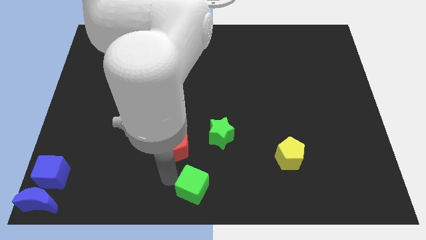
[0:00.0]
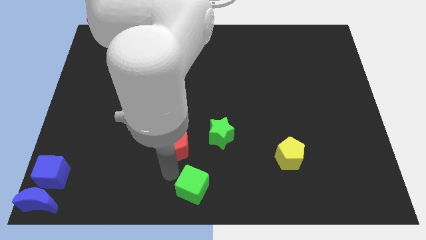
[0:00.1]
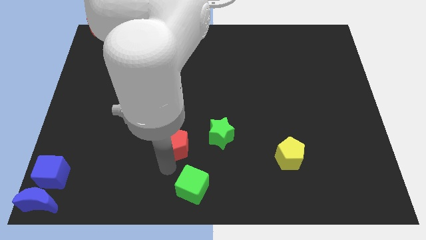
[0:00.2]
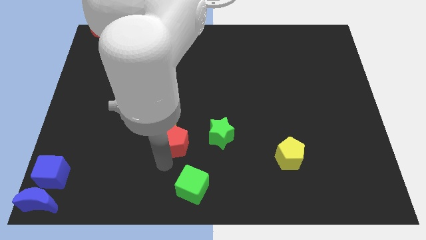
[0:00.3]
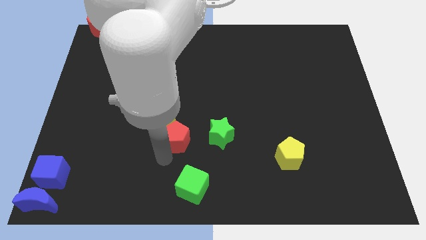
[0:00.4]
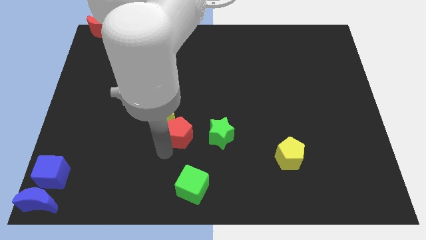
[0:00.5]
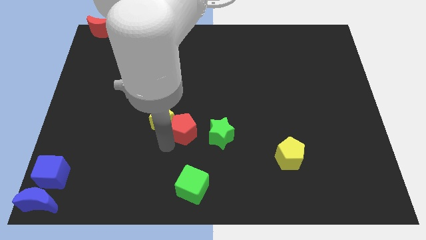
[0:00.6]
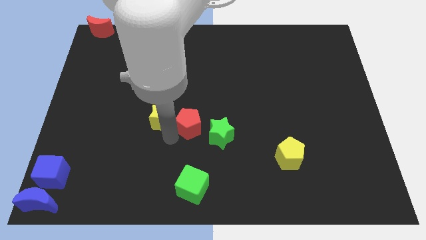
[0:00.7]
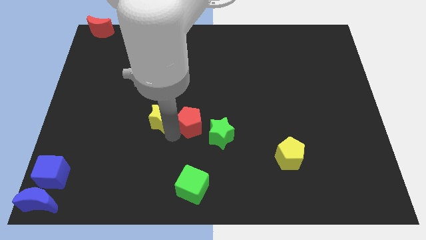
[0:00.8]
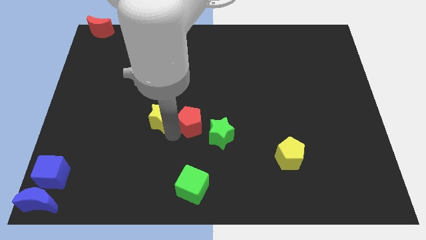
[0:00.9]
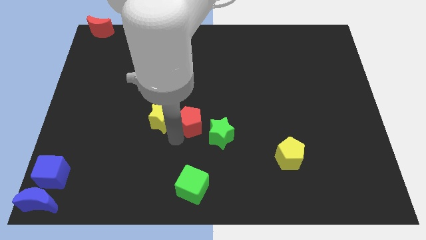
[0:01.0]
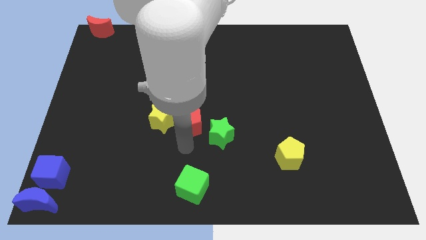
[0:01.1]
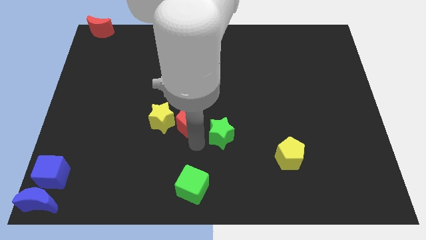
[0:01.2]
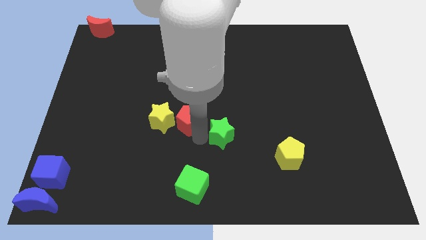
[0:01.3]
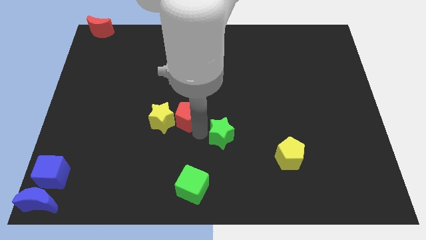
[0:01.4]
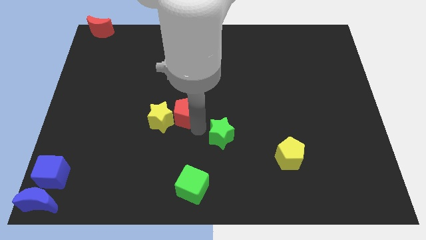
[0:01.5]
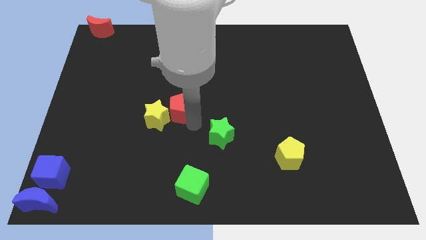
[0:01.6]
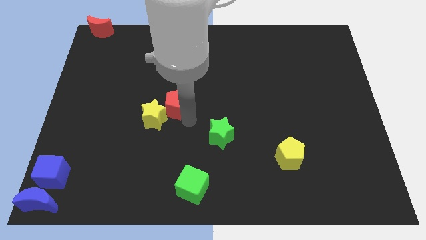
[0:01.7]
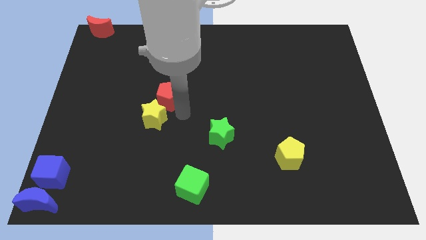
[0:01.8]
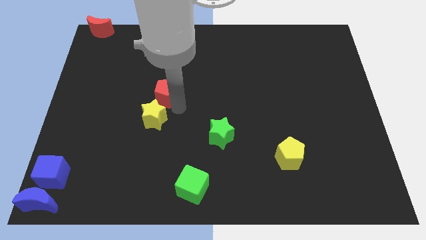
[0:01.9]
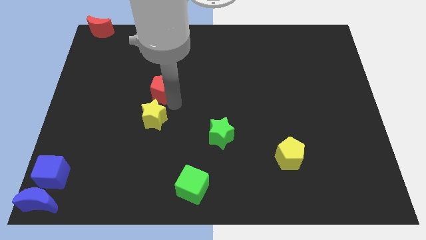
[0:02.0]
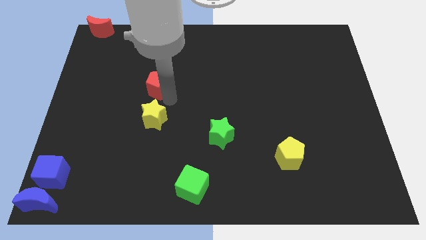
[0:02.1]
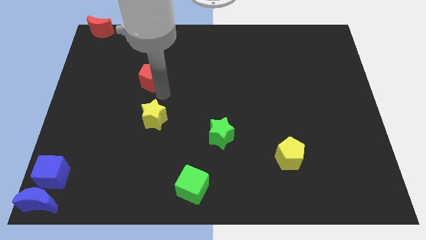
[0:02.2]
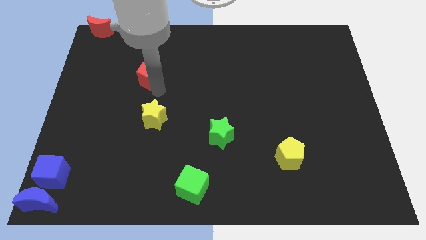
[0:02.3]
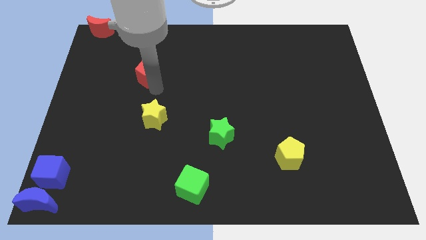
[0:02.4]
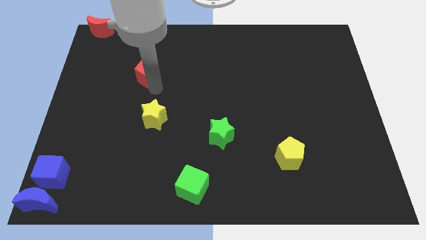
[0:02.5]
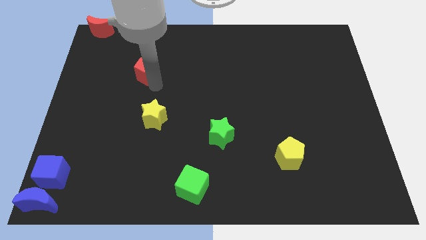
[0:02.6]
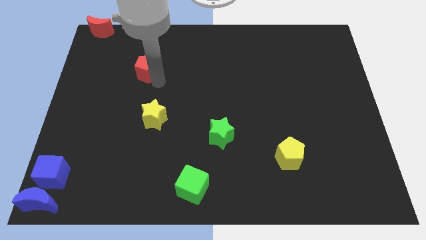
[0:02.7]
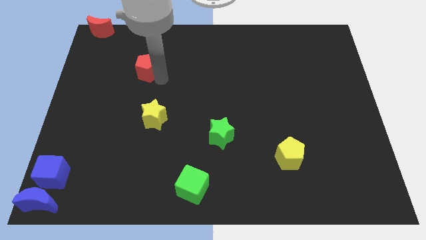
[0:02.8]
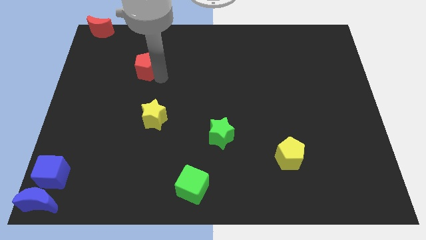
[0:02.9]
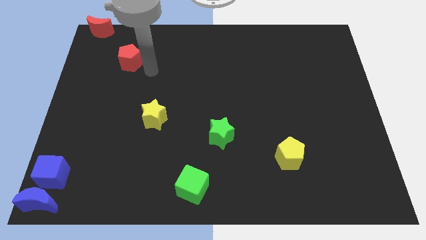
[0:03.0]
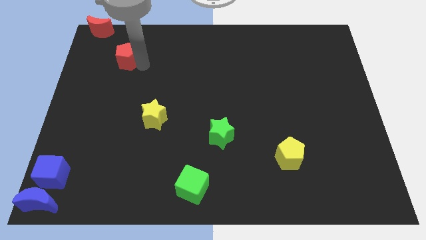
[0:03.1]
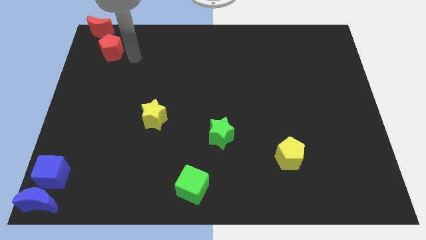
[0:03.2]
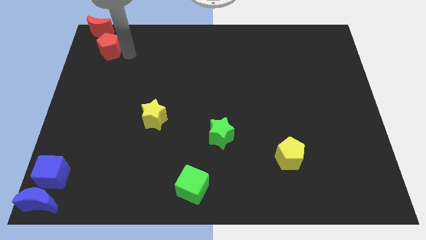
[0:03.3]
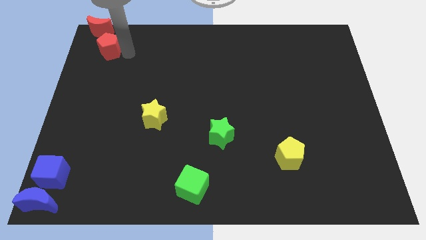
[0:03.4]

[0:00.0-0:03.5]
separate red pentagon from green cube

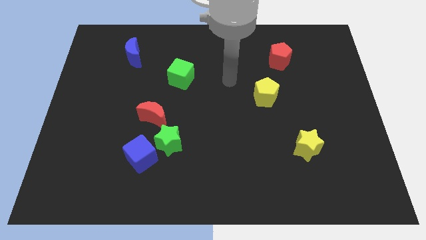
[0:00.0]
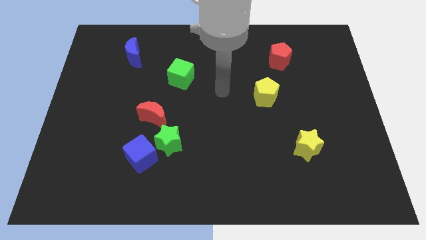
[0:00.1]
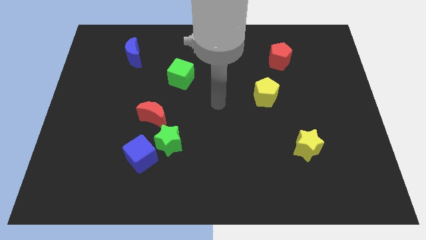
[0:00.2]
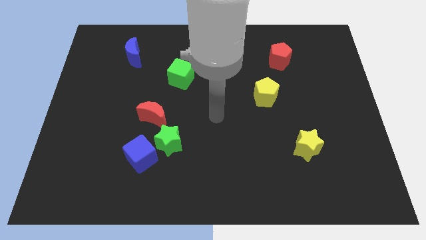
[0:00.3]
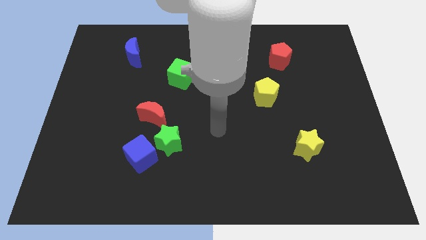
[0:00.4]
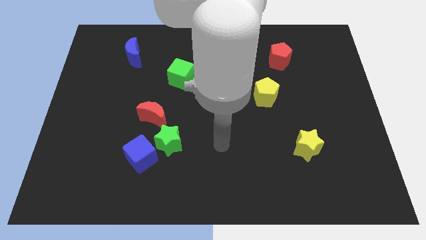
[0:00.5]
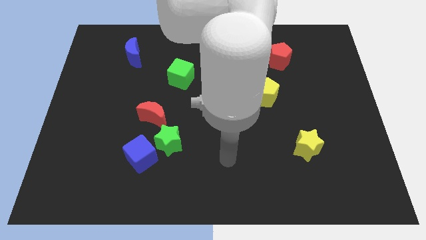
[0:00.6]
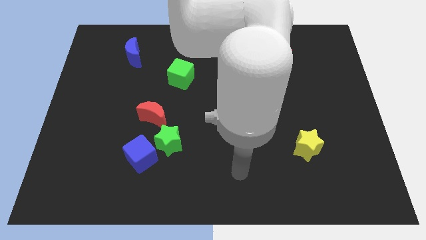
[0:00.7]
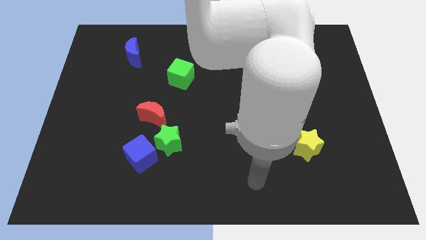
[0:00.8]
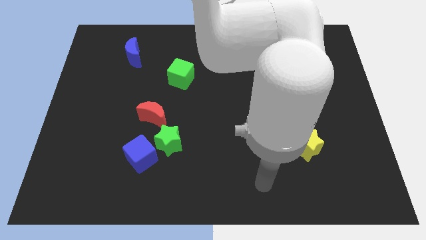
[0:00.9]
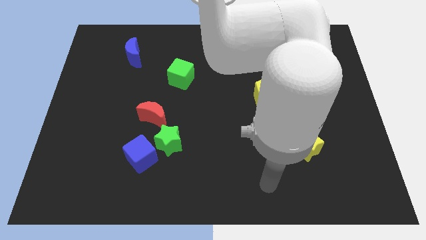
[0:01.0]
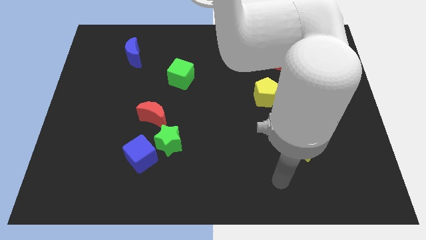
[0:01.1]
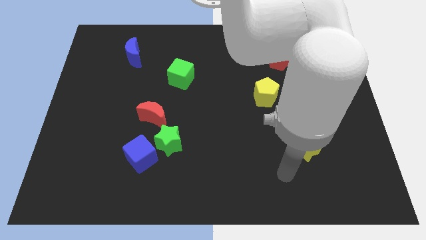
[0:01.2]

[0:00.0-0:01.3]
place your arm below the yellow star

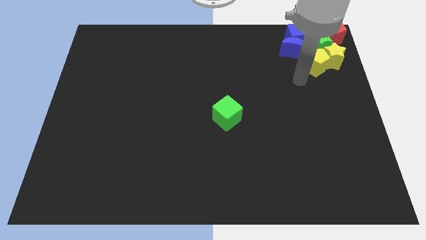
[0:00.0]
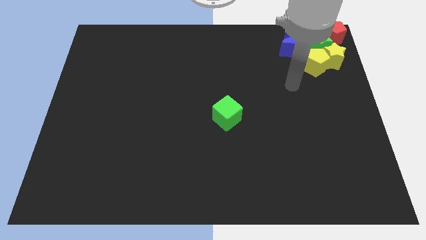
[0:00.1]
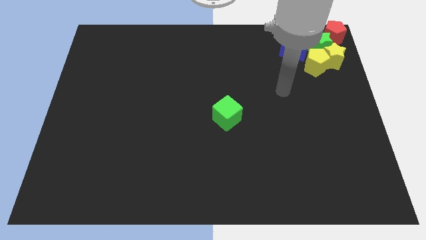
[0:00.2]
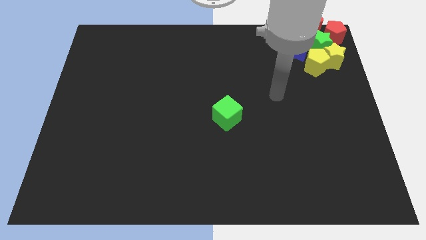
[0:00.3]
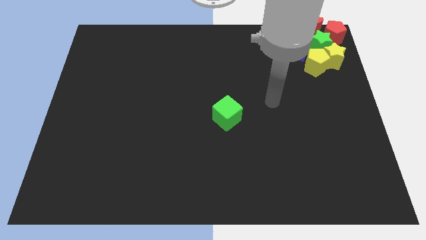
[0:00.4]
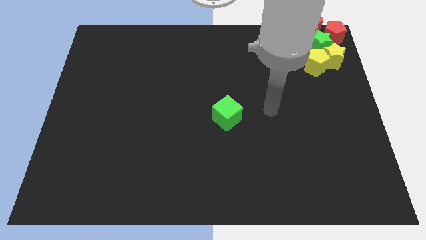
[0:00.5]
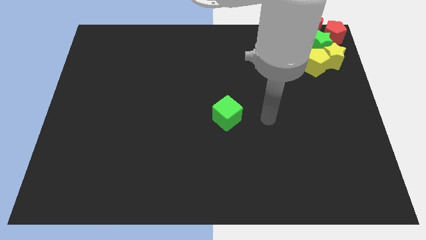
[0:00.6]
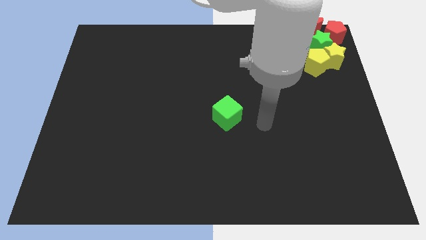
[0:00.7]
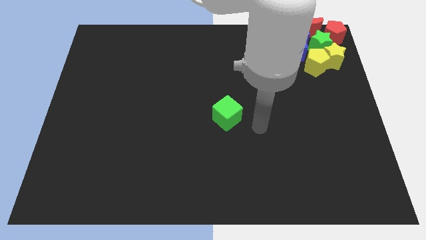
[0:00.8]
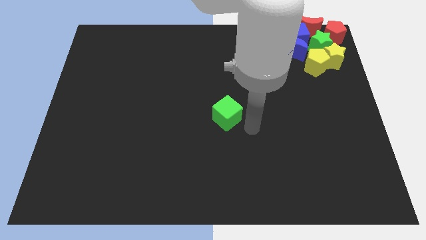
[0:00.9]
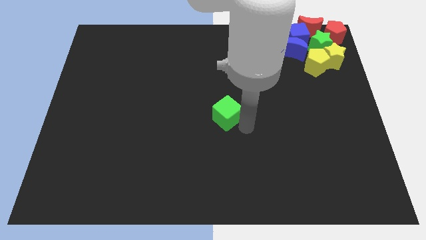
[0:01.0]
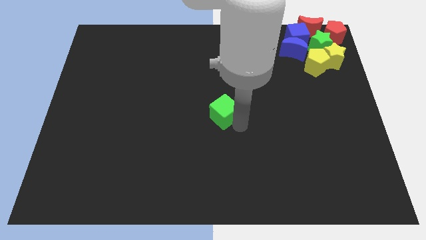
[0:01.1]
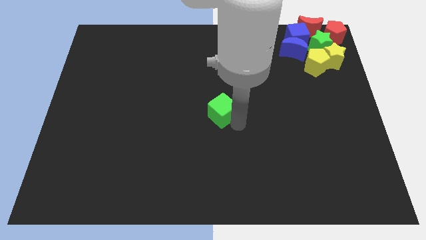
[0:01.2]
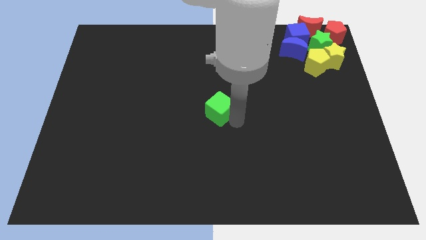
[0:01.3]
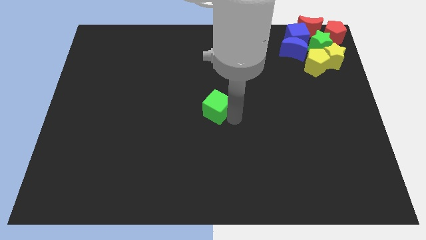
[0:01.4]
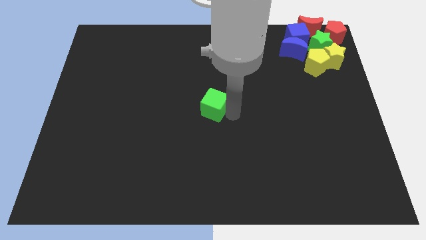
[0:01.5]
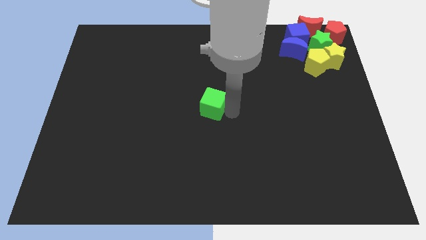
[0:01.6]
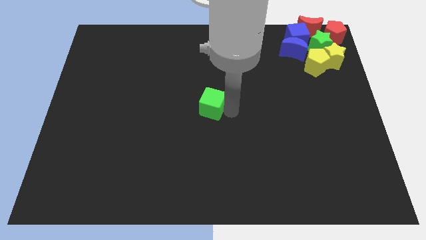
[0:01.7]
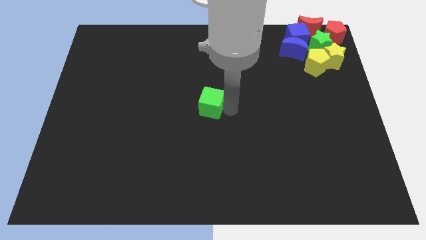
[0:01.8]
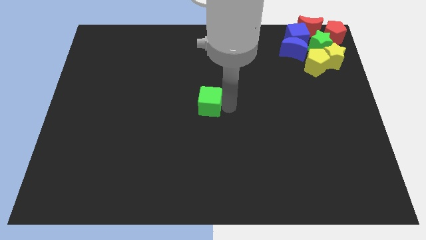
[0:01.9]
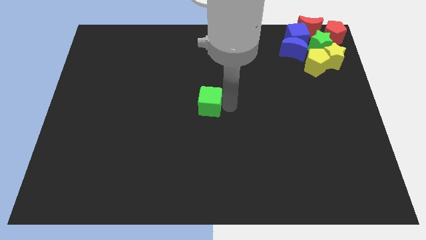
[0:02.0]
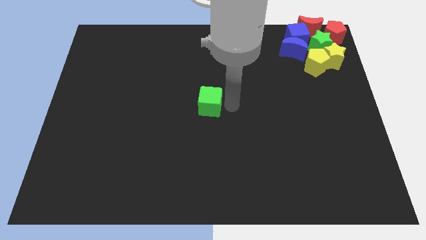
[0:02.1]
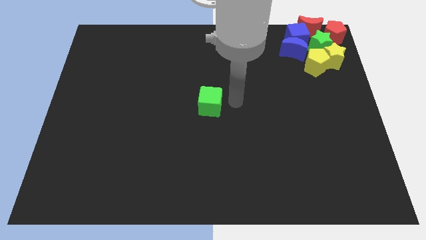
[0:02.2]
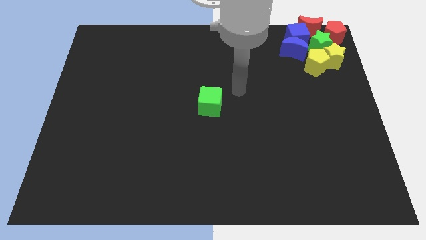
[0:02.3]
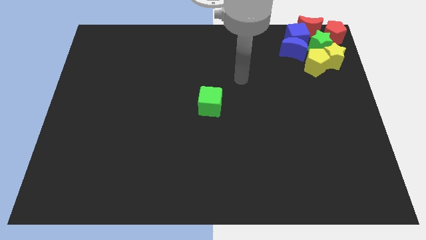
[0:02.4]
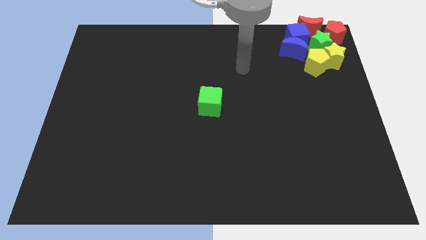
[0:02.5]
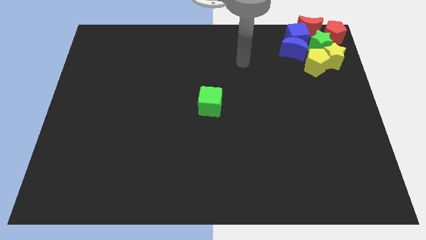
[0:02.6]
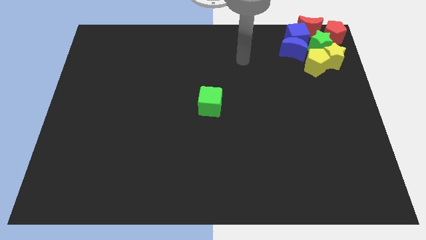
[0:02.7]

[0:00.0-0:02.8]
place green cube in the center of the board

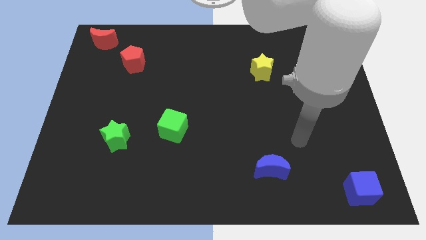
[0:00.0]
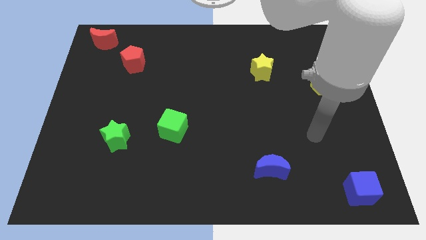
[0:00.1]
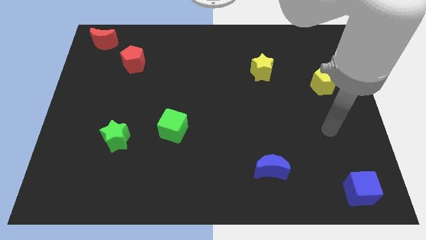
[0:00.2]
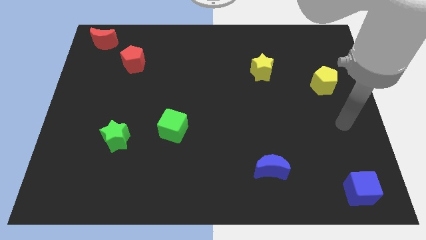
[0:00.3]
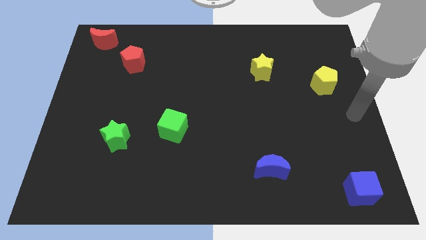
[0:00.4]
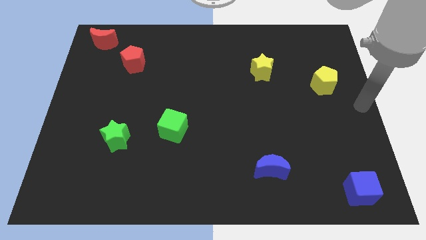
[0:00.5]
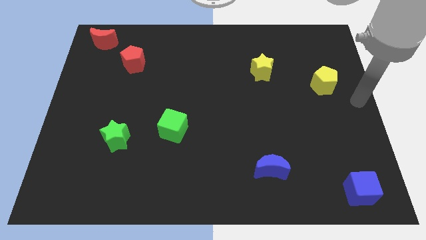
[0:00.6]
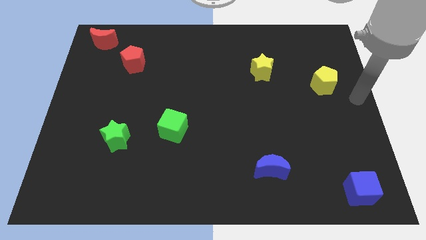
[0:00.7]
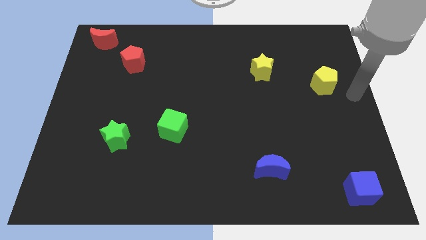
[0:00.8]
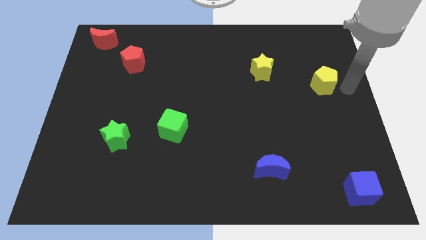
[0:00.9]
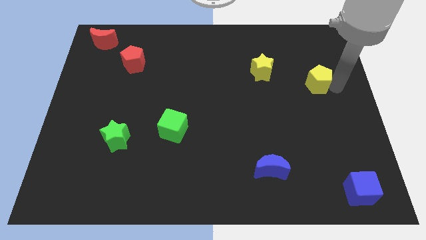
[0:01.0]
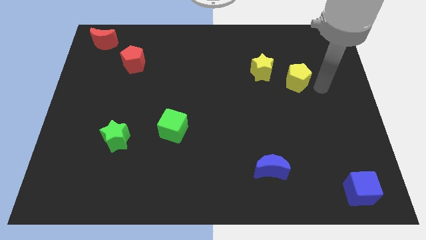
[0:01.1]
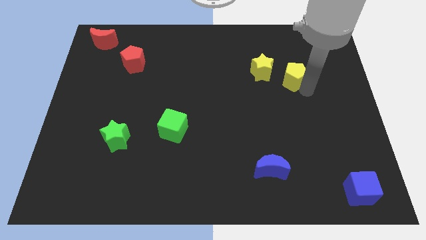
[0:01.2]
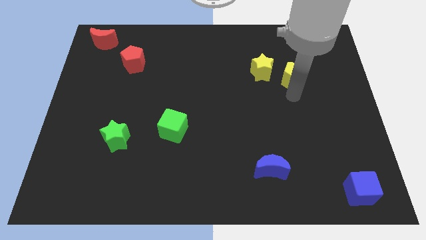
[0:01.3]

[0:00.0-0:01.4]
push the yellow pentagon to the right of the yellow star

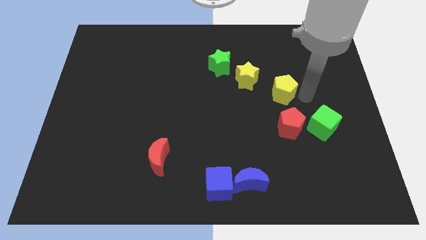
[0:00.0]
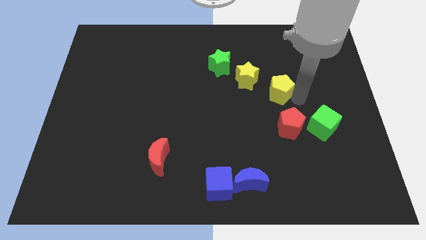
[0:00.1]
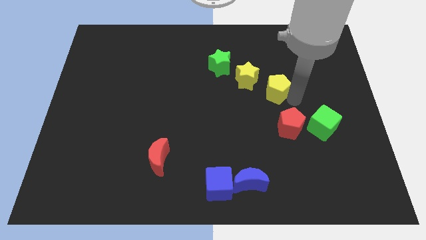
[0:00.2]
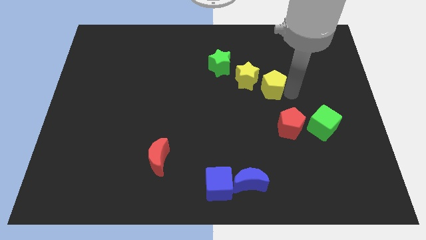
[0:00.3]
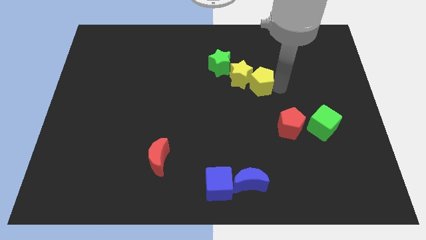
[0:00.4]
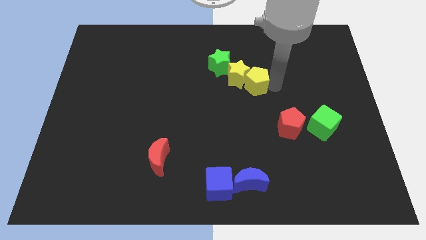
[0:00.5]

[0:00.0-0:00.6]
move the yellow pentagon into the yellow star
